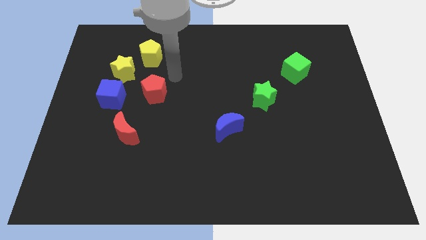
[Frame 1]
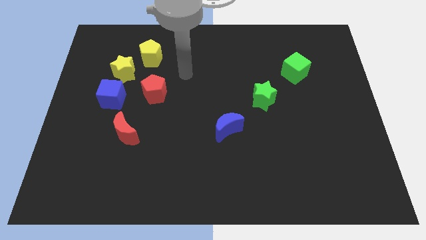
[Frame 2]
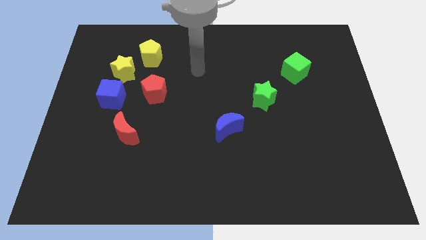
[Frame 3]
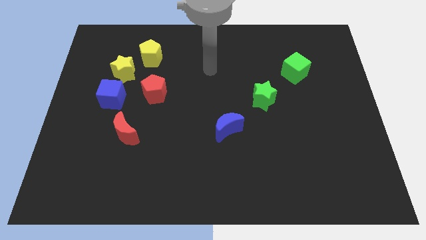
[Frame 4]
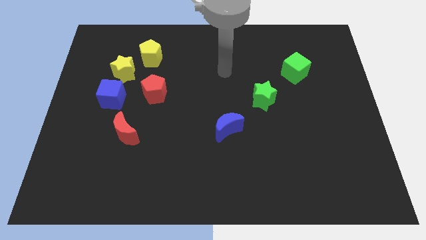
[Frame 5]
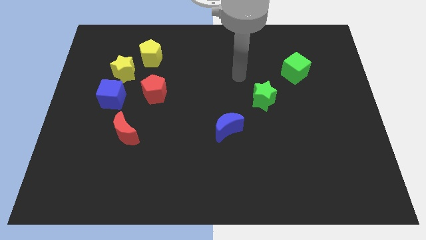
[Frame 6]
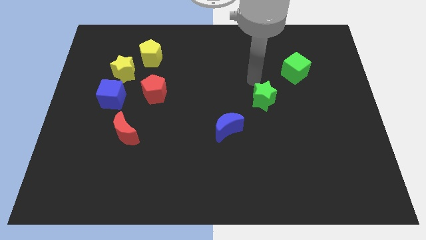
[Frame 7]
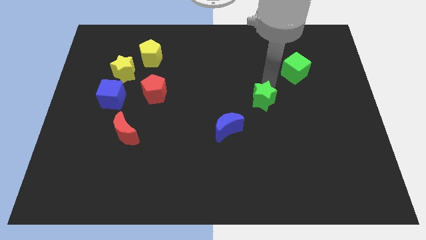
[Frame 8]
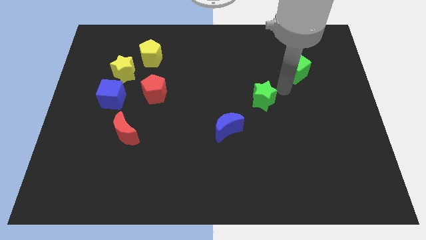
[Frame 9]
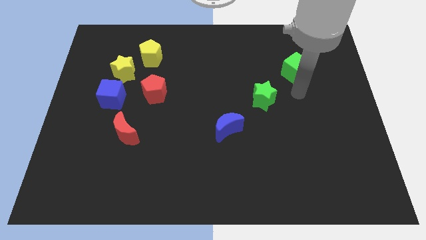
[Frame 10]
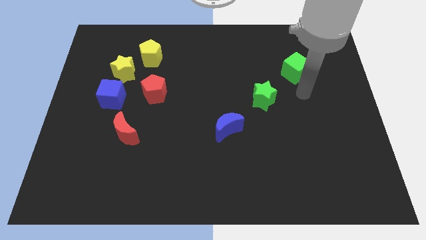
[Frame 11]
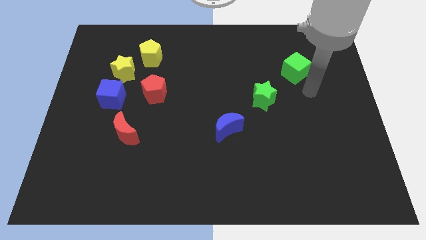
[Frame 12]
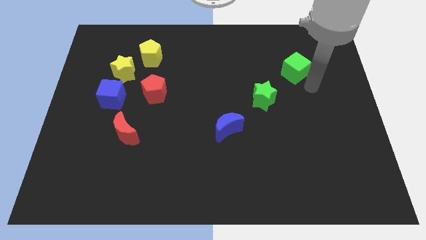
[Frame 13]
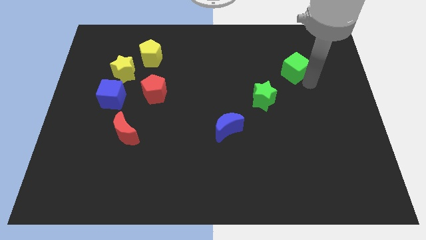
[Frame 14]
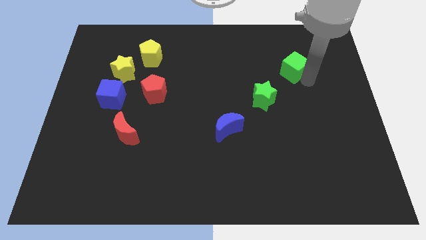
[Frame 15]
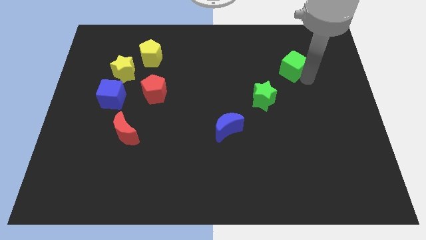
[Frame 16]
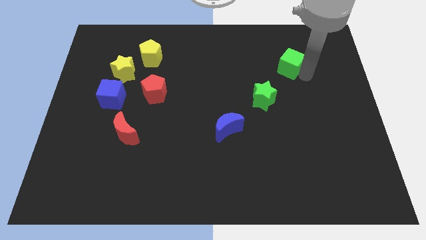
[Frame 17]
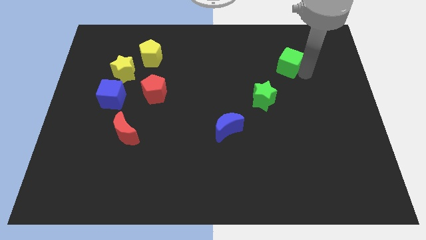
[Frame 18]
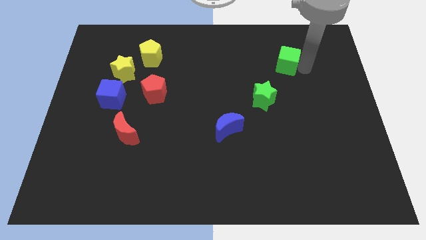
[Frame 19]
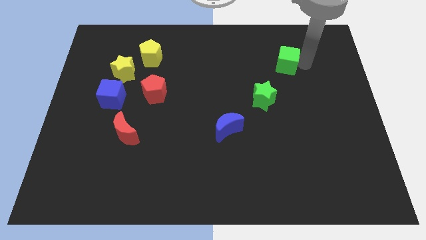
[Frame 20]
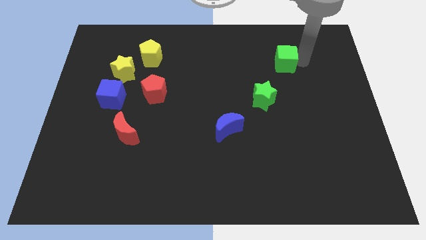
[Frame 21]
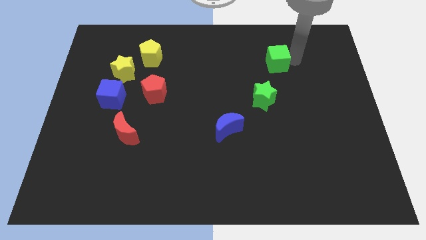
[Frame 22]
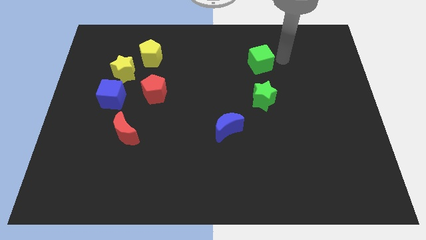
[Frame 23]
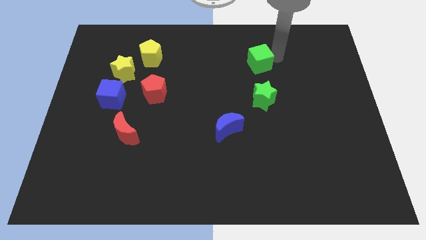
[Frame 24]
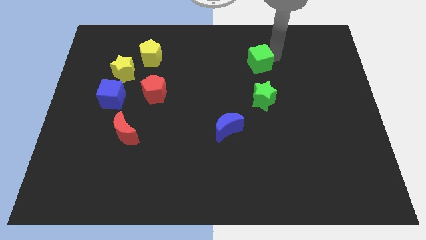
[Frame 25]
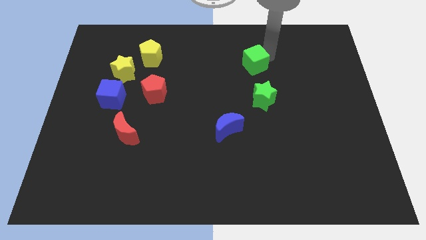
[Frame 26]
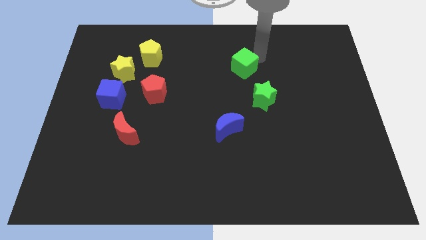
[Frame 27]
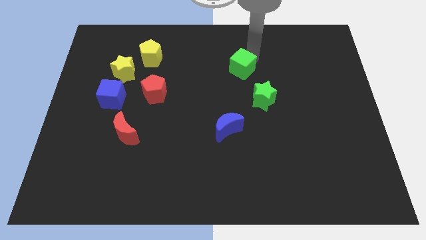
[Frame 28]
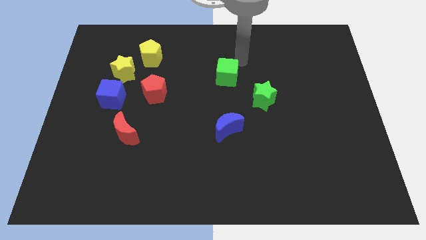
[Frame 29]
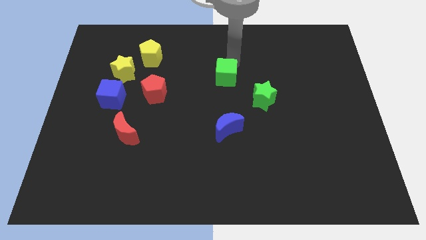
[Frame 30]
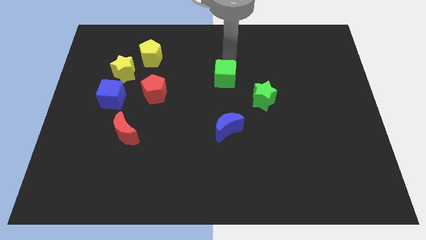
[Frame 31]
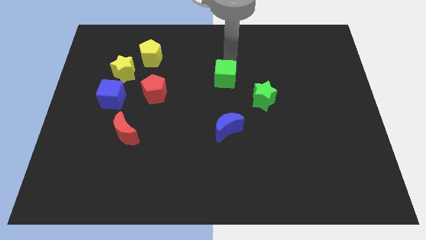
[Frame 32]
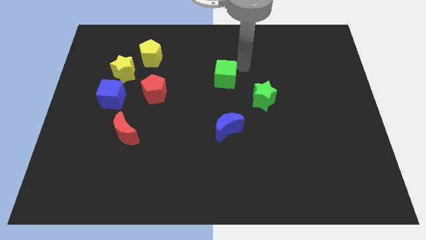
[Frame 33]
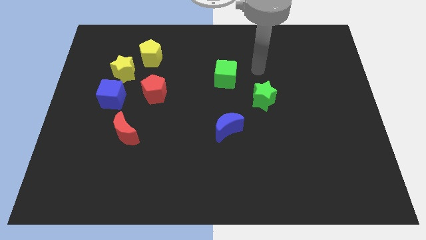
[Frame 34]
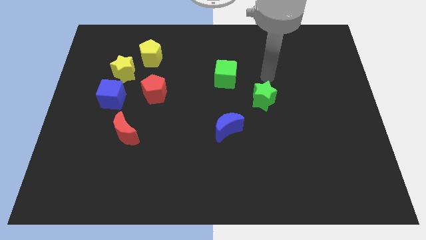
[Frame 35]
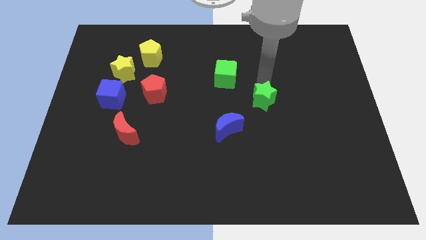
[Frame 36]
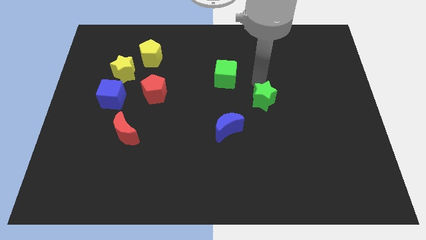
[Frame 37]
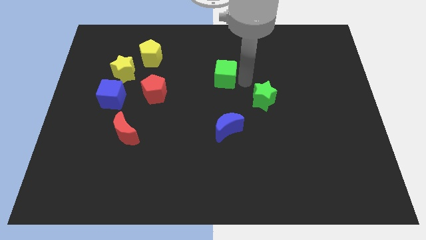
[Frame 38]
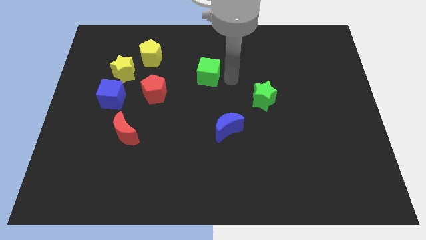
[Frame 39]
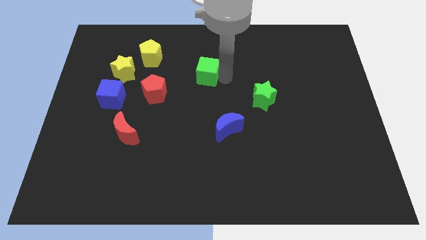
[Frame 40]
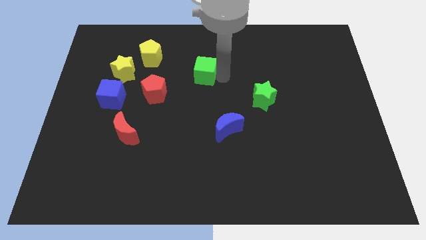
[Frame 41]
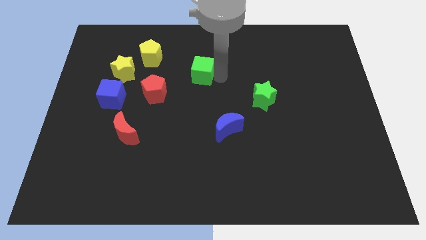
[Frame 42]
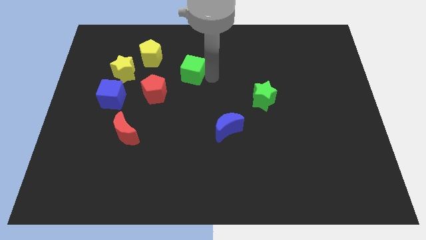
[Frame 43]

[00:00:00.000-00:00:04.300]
push the green cube diagonally top left to the green star

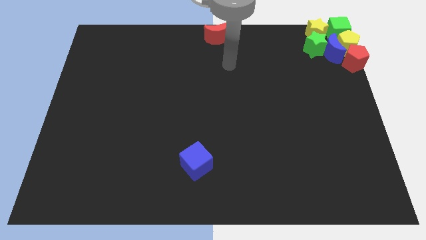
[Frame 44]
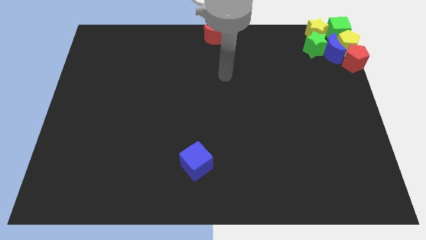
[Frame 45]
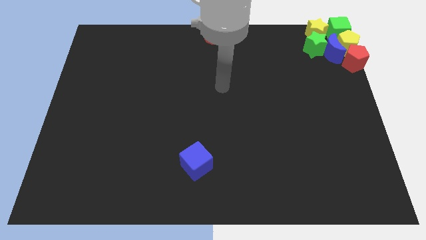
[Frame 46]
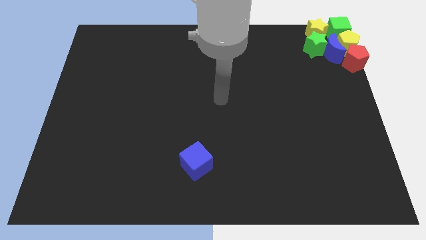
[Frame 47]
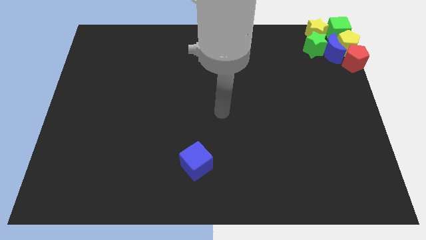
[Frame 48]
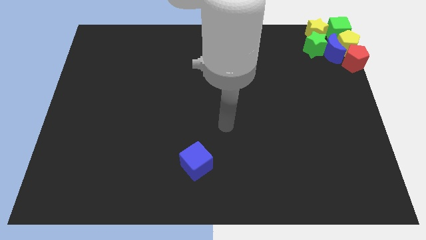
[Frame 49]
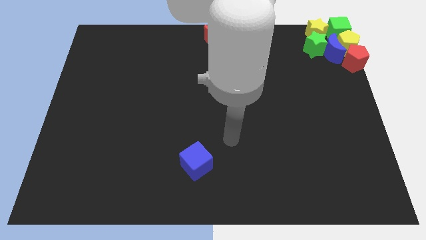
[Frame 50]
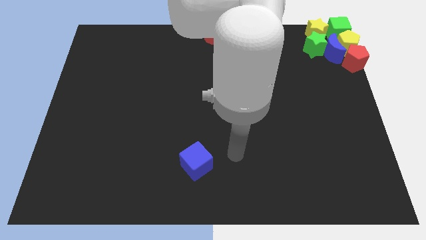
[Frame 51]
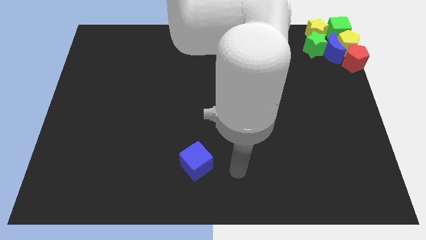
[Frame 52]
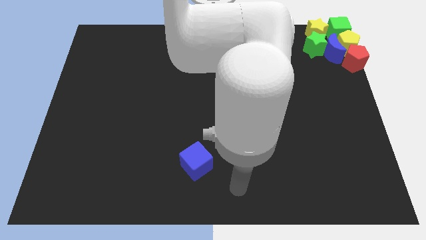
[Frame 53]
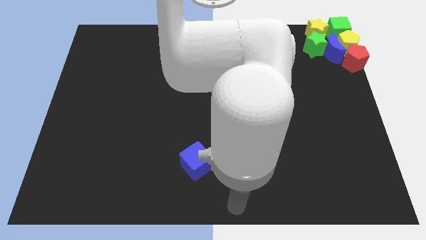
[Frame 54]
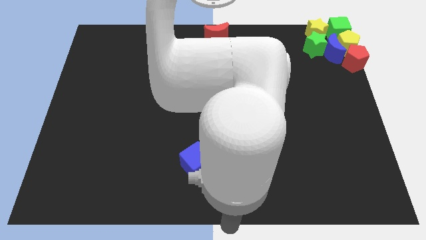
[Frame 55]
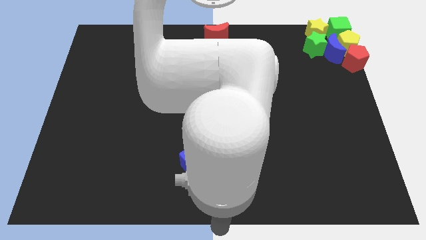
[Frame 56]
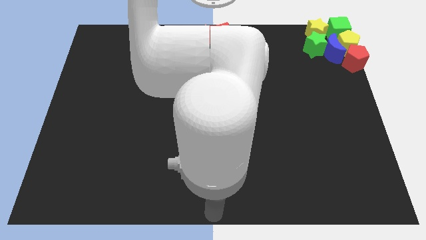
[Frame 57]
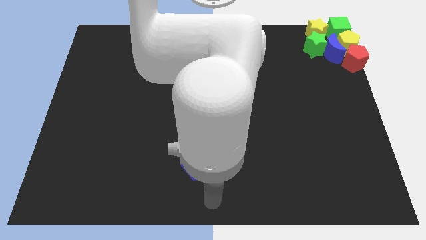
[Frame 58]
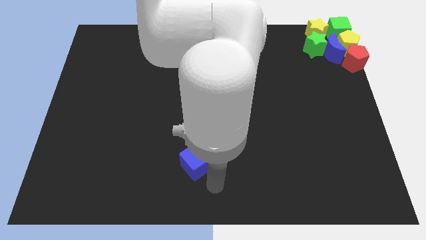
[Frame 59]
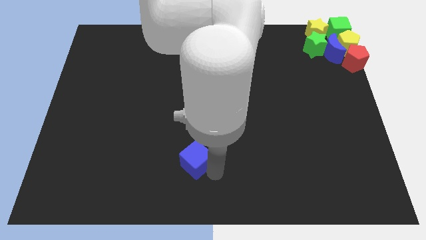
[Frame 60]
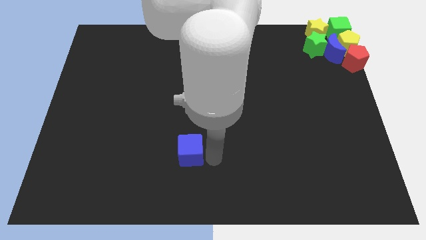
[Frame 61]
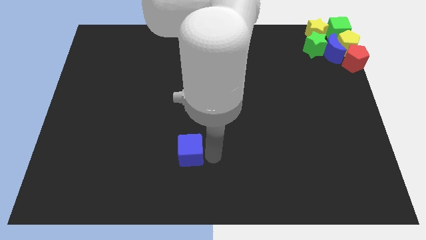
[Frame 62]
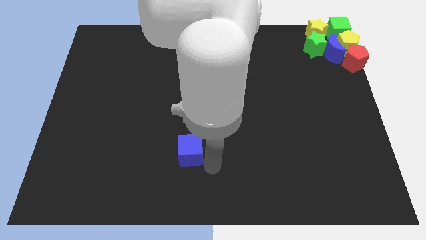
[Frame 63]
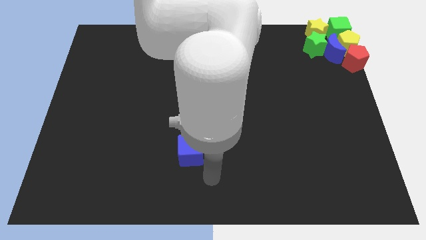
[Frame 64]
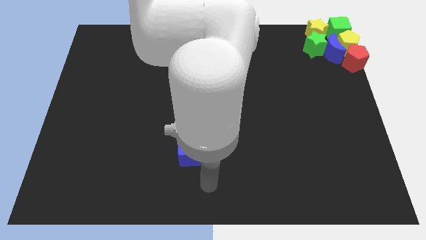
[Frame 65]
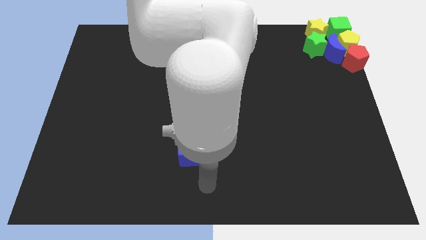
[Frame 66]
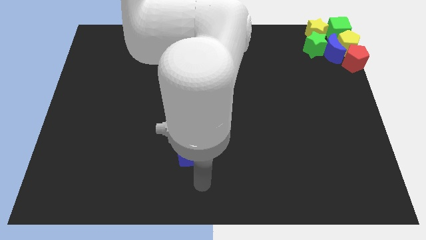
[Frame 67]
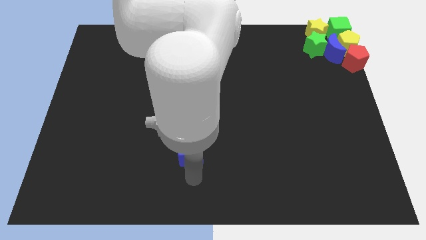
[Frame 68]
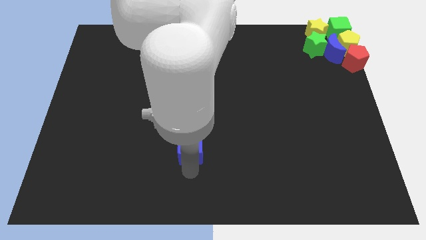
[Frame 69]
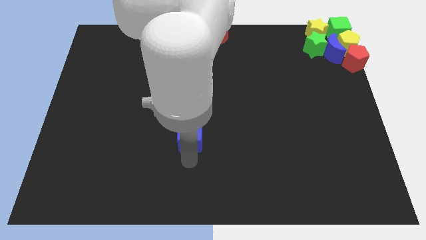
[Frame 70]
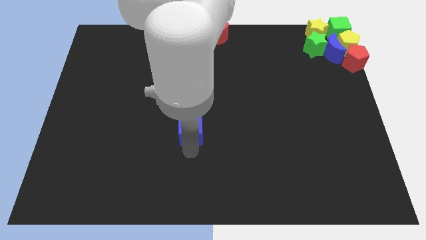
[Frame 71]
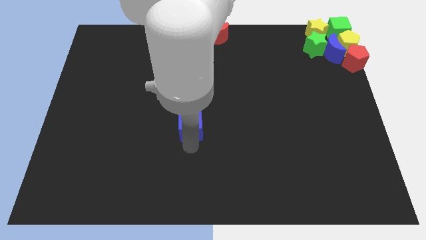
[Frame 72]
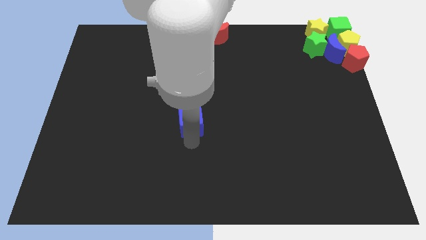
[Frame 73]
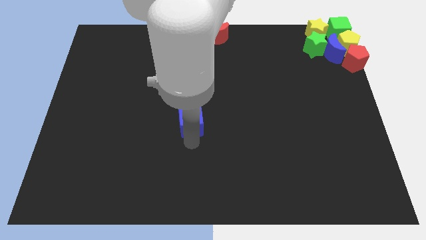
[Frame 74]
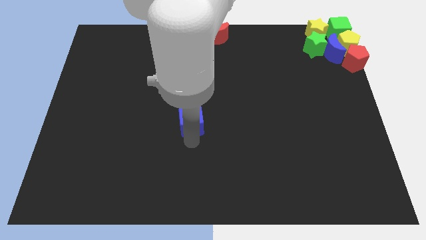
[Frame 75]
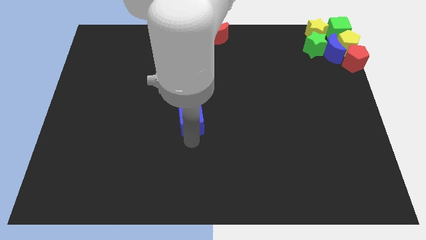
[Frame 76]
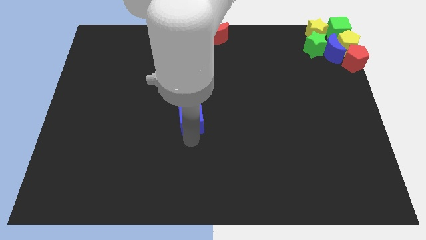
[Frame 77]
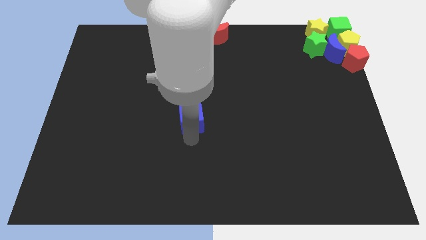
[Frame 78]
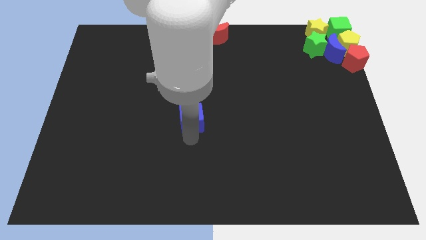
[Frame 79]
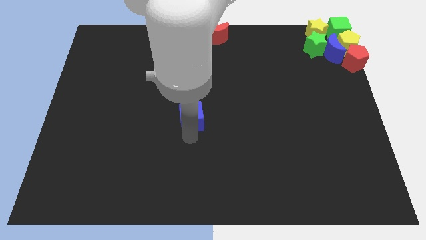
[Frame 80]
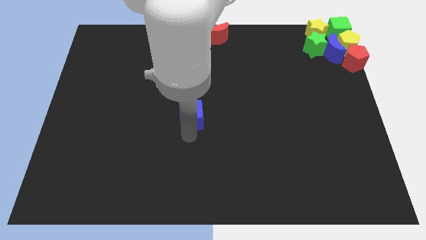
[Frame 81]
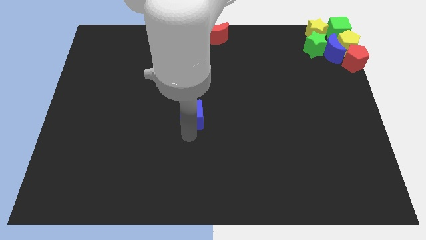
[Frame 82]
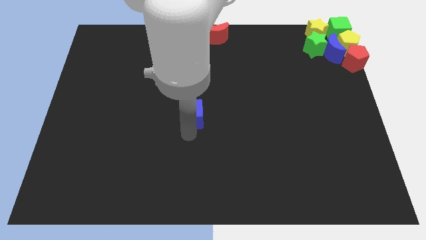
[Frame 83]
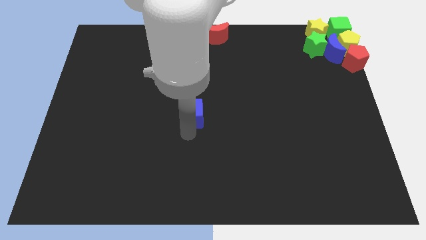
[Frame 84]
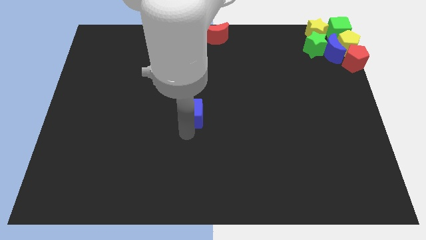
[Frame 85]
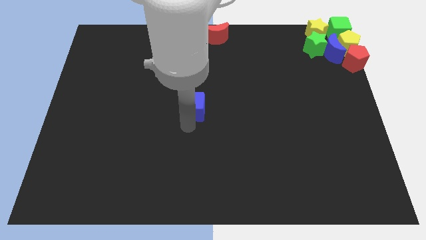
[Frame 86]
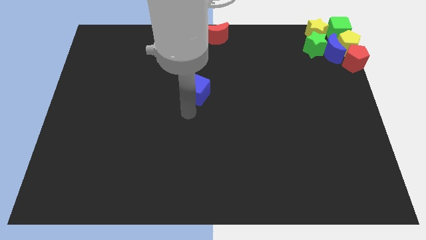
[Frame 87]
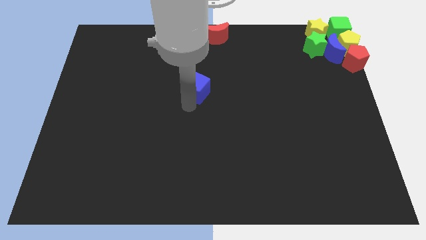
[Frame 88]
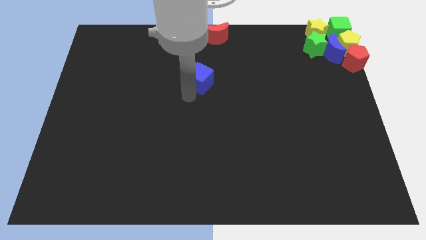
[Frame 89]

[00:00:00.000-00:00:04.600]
push the blue cube towards the red crescent

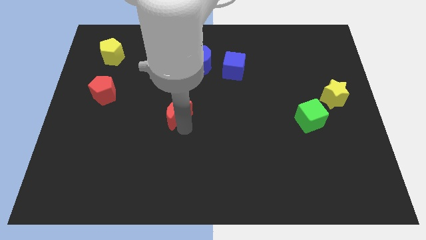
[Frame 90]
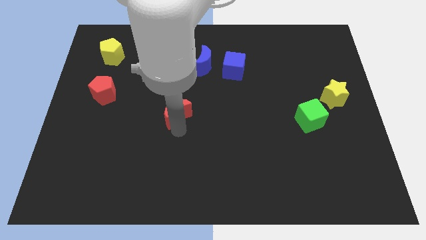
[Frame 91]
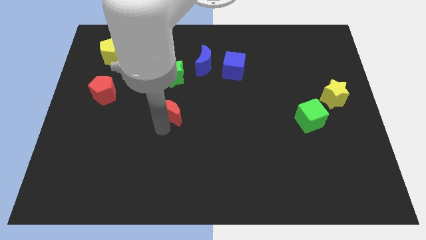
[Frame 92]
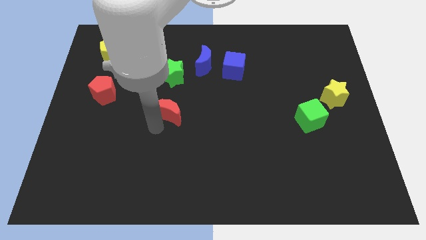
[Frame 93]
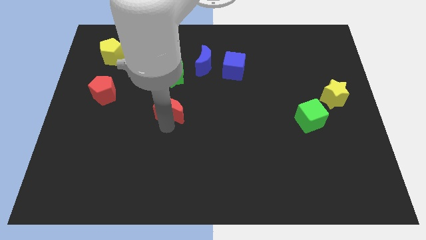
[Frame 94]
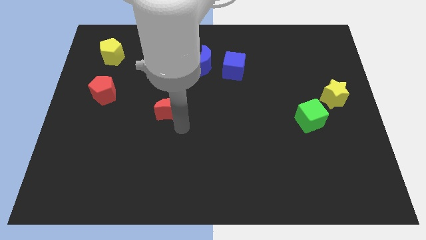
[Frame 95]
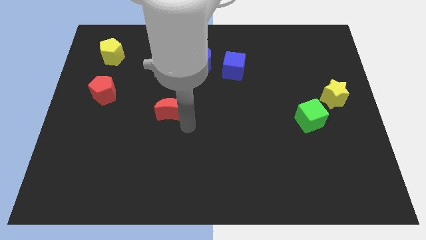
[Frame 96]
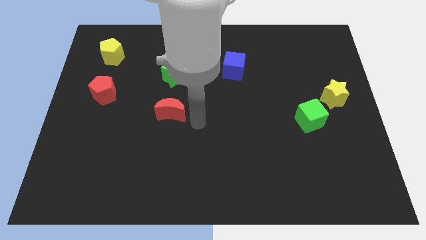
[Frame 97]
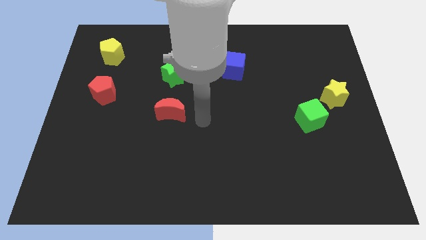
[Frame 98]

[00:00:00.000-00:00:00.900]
put the red moon at the bottom of green star
